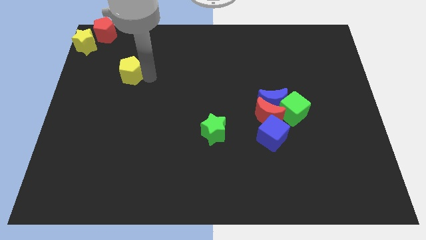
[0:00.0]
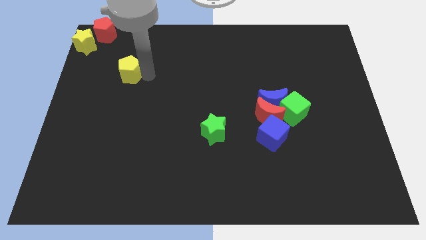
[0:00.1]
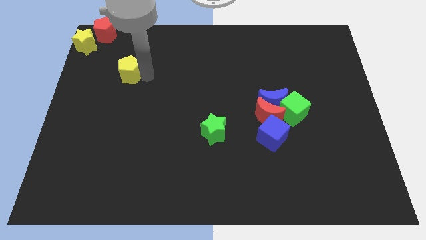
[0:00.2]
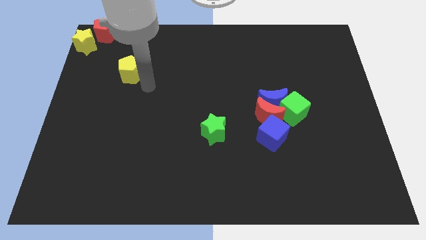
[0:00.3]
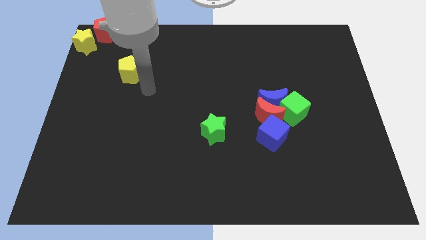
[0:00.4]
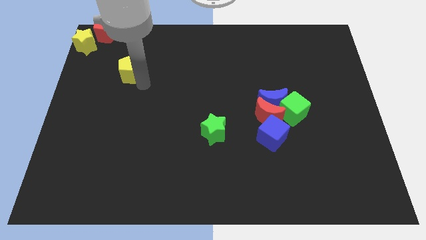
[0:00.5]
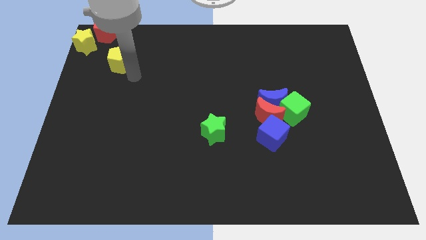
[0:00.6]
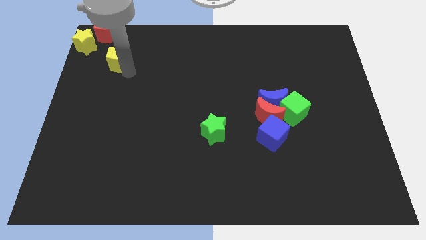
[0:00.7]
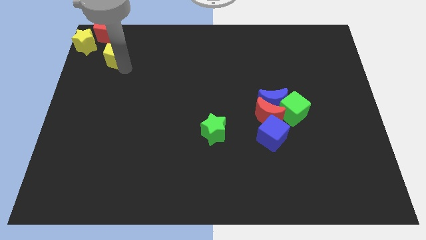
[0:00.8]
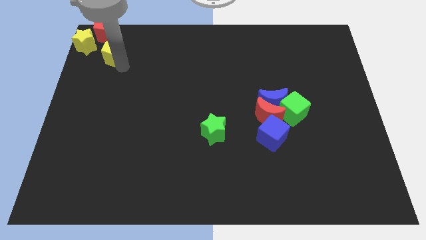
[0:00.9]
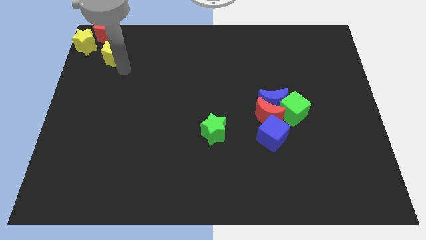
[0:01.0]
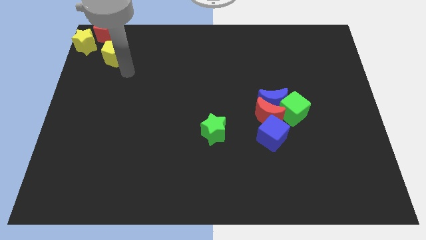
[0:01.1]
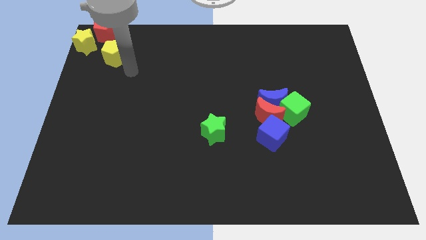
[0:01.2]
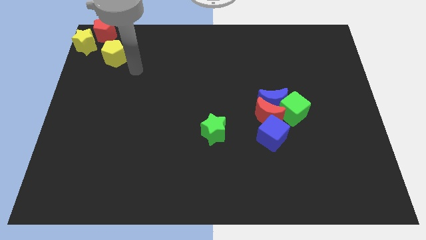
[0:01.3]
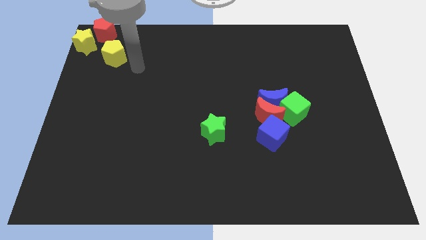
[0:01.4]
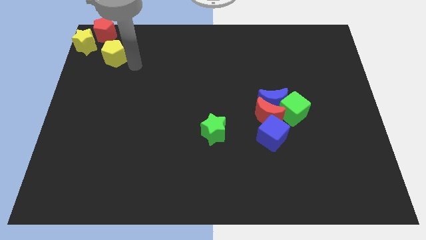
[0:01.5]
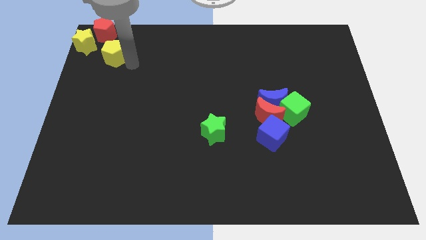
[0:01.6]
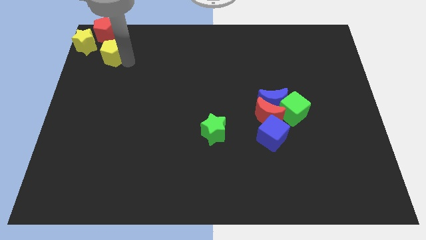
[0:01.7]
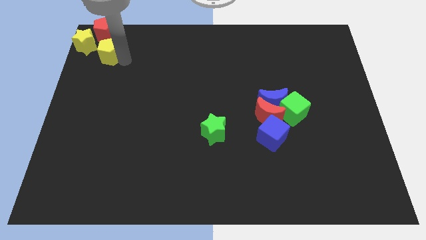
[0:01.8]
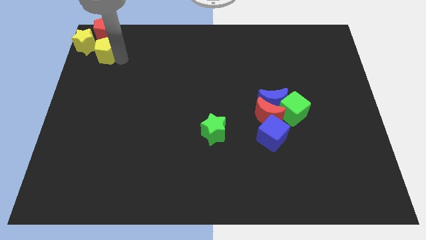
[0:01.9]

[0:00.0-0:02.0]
move the yellow pentagon below the red pentagon

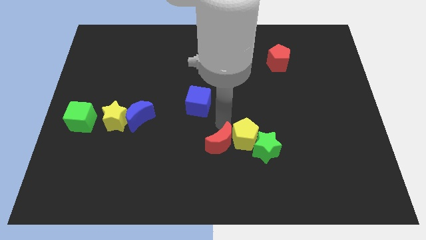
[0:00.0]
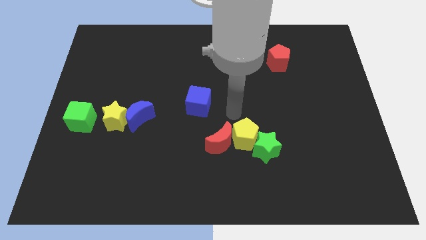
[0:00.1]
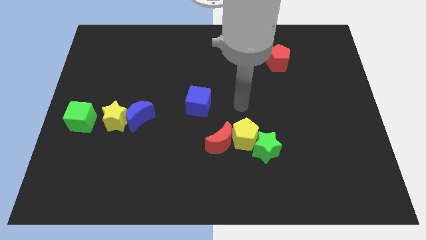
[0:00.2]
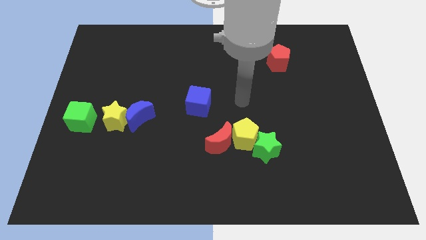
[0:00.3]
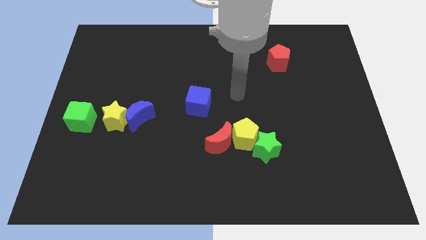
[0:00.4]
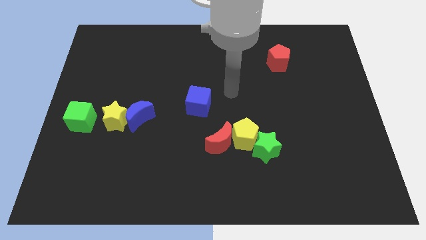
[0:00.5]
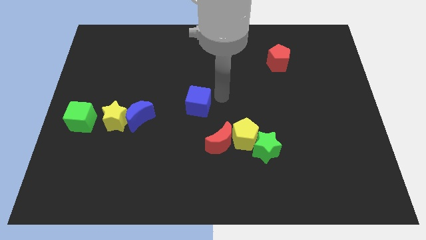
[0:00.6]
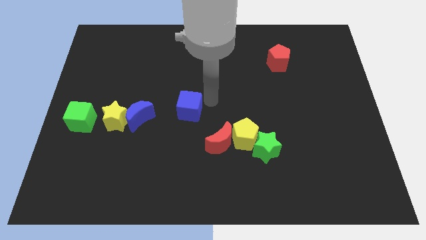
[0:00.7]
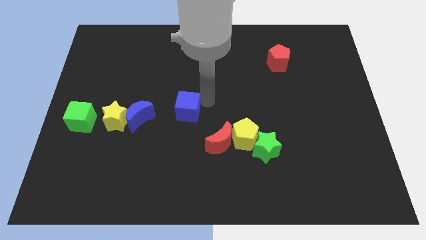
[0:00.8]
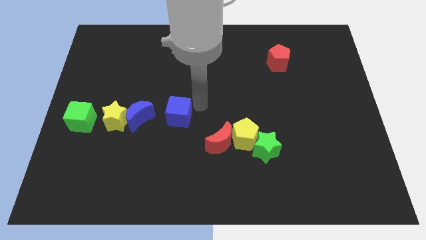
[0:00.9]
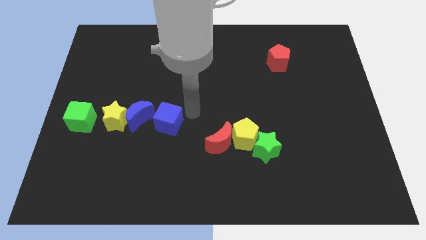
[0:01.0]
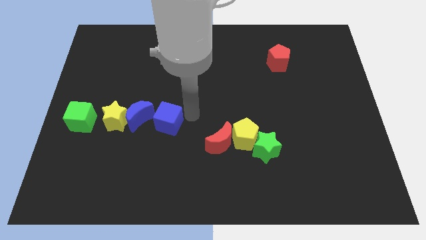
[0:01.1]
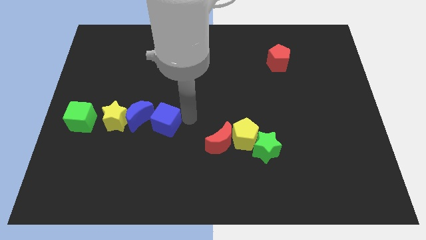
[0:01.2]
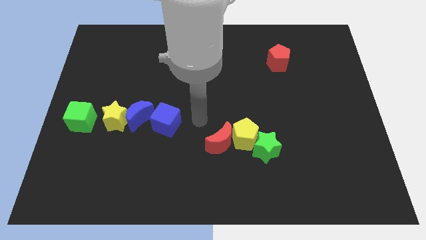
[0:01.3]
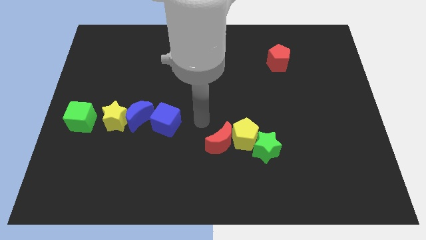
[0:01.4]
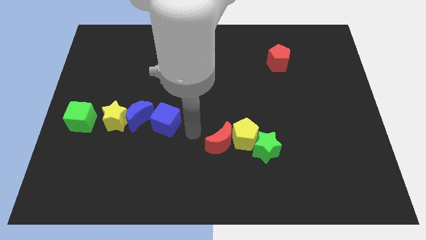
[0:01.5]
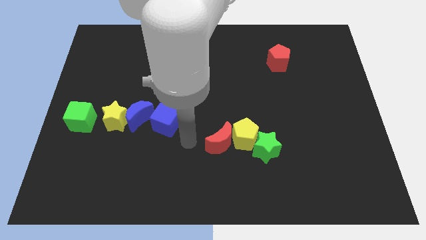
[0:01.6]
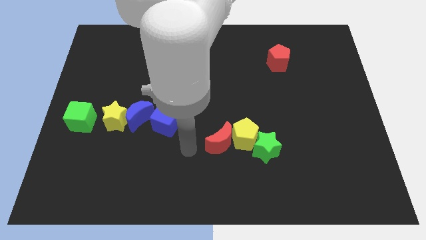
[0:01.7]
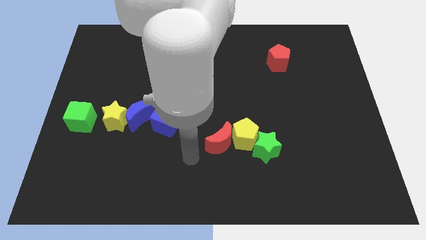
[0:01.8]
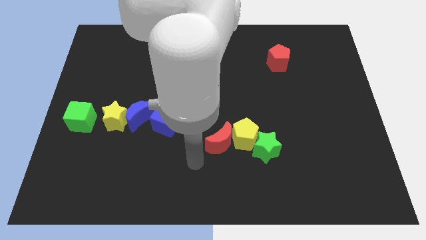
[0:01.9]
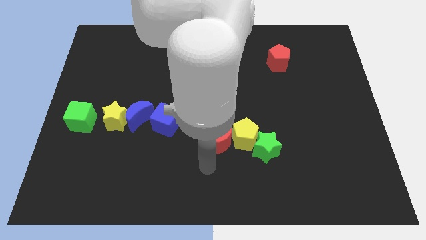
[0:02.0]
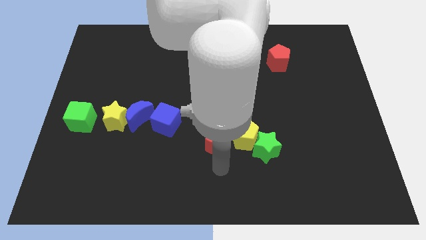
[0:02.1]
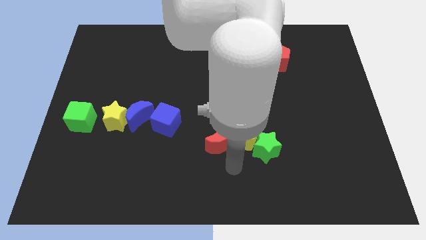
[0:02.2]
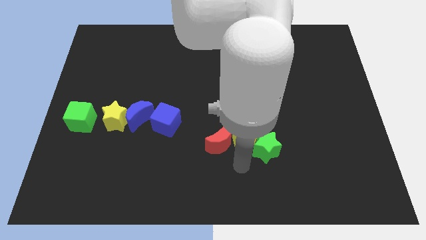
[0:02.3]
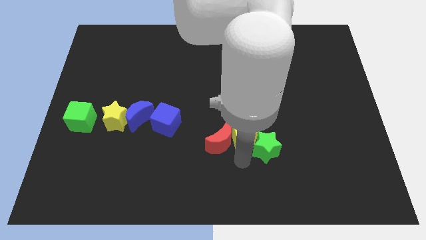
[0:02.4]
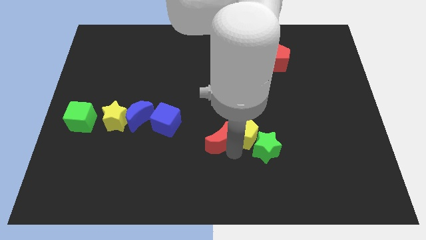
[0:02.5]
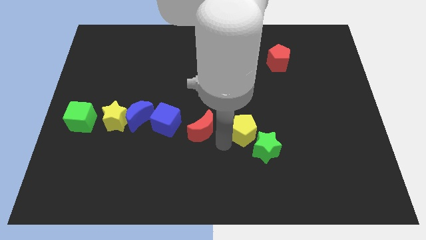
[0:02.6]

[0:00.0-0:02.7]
place the blue cube right to the blue moon

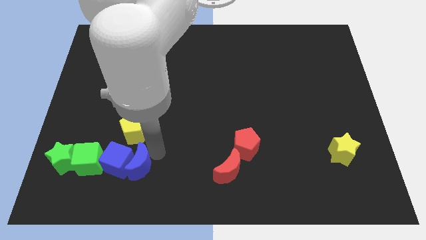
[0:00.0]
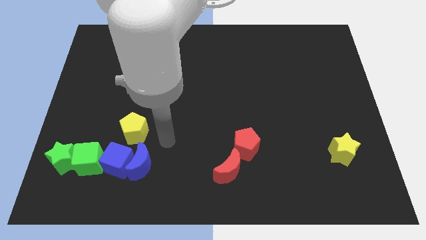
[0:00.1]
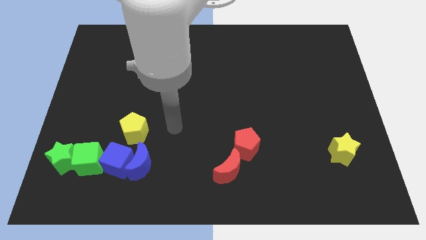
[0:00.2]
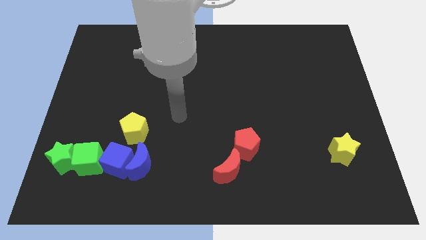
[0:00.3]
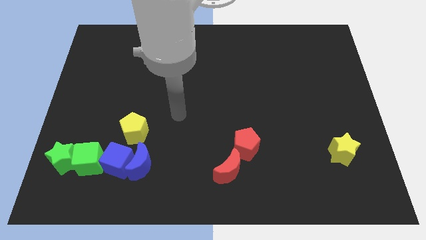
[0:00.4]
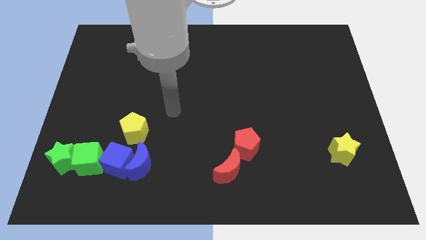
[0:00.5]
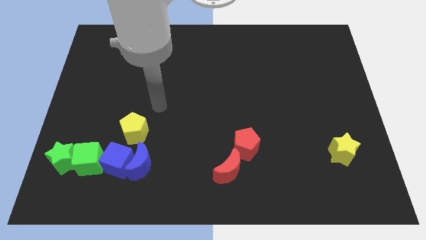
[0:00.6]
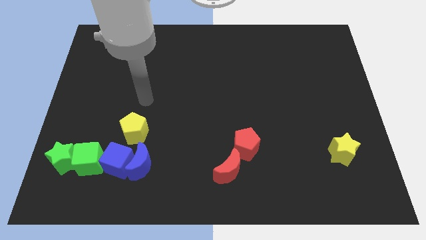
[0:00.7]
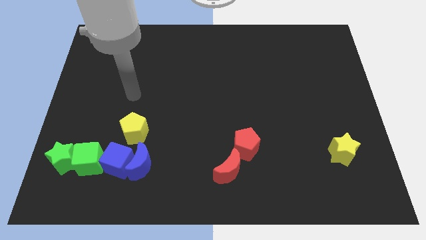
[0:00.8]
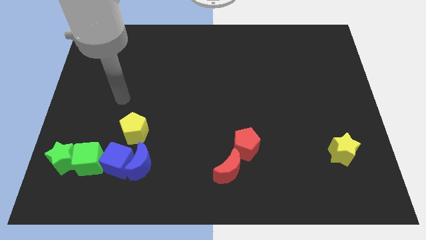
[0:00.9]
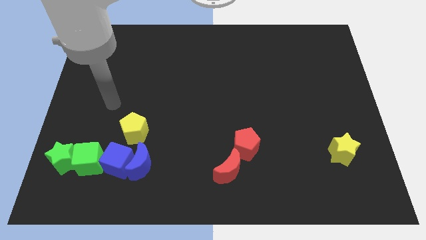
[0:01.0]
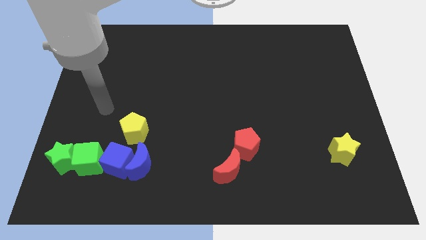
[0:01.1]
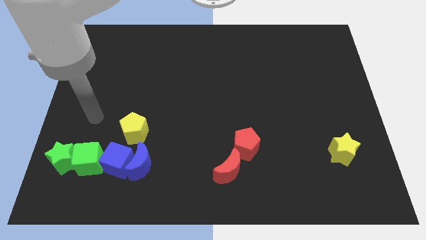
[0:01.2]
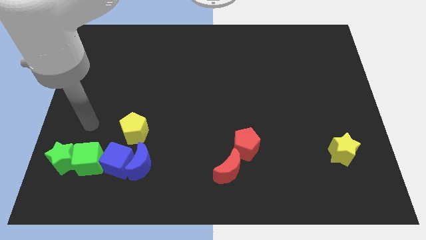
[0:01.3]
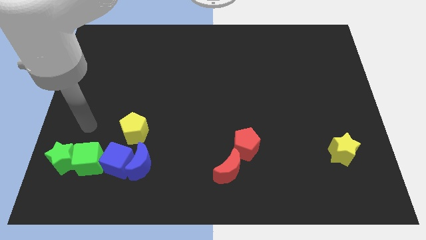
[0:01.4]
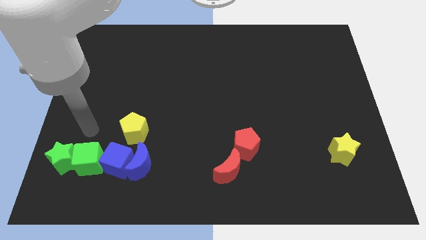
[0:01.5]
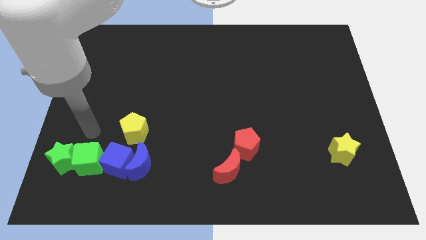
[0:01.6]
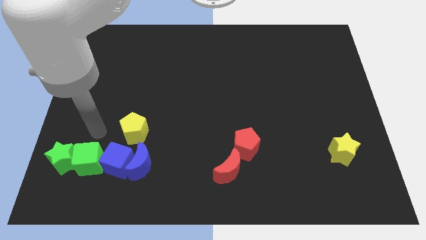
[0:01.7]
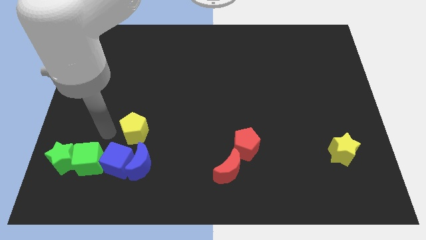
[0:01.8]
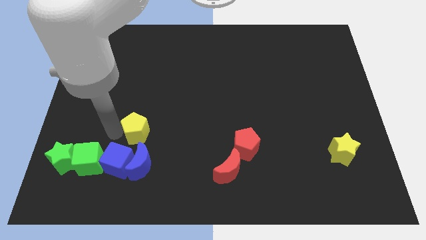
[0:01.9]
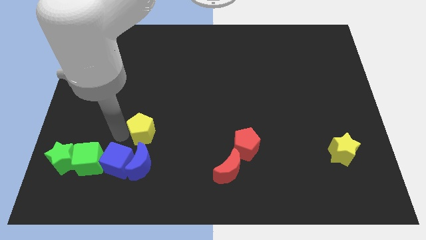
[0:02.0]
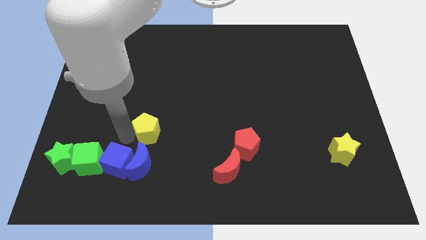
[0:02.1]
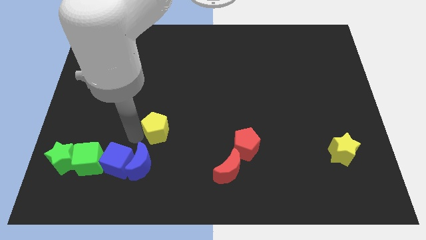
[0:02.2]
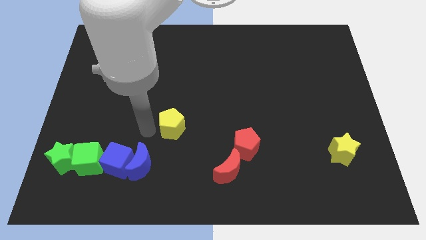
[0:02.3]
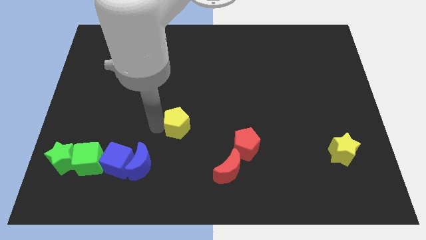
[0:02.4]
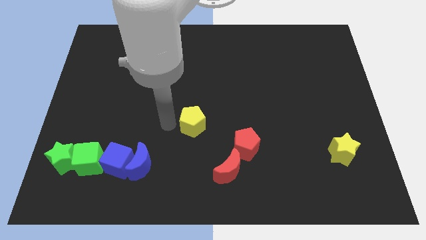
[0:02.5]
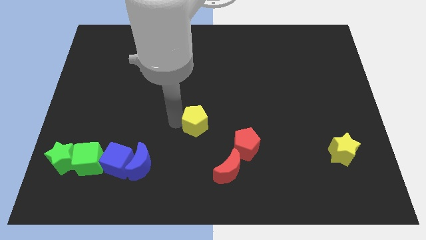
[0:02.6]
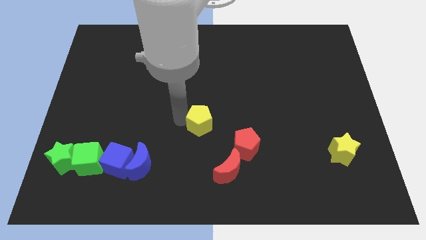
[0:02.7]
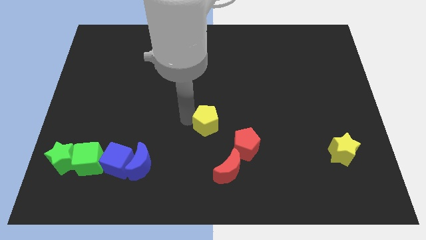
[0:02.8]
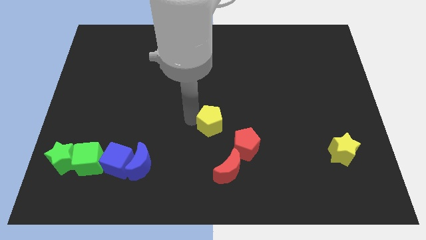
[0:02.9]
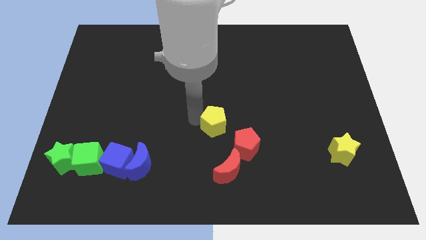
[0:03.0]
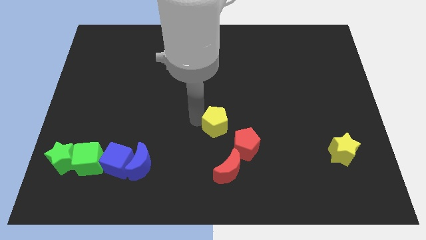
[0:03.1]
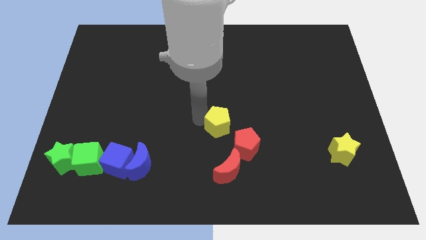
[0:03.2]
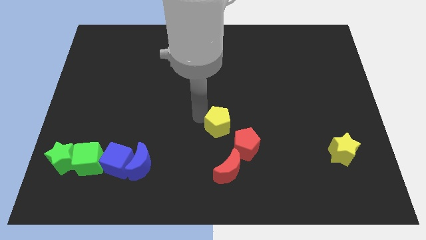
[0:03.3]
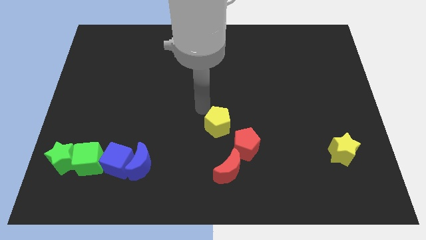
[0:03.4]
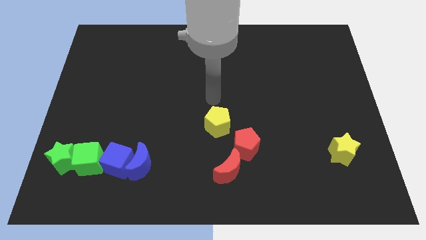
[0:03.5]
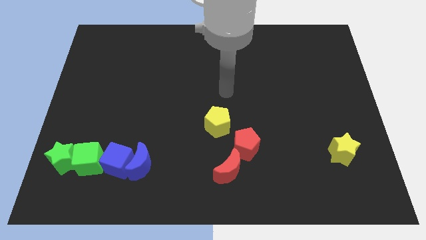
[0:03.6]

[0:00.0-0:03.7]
place the yellow pentagon diagonally on the top left side of the red pentagon

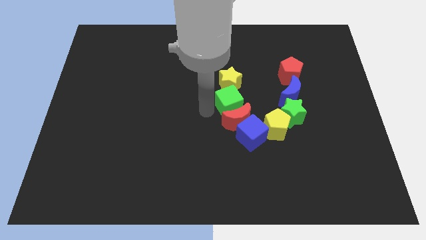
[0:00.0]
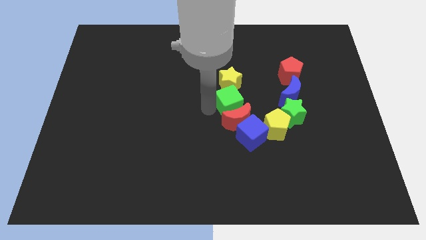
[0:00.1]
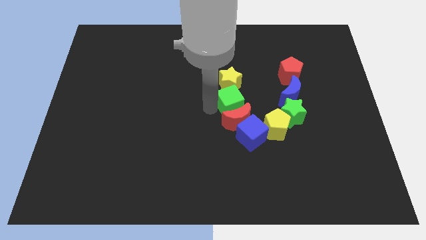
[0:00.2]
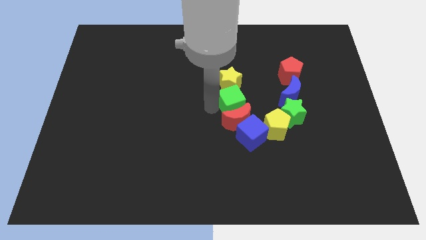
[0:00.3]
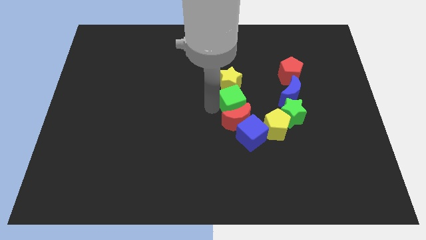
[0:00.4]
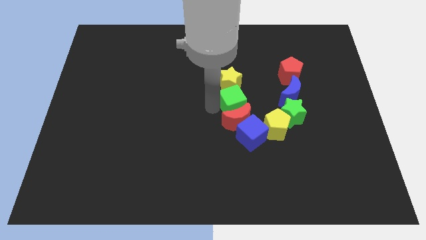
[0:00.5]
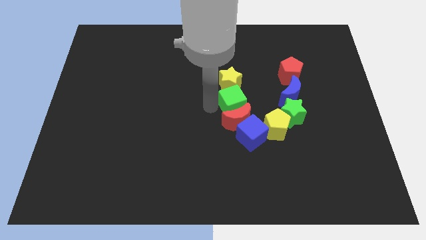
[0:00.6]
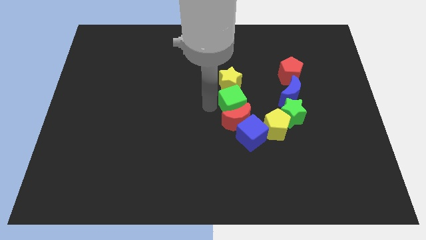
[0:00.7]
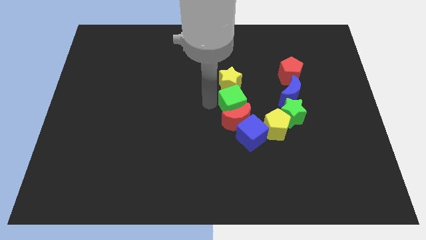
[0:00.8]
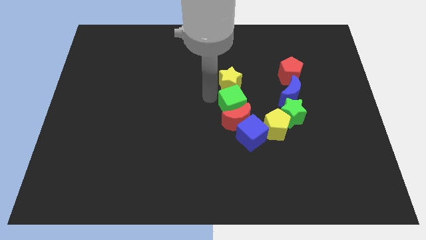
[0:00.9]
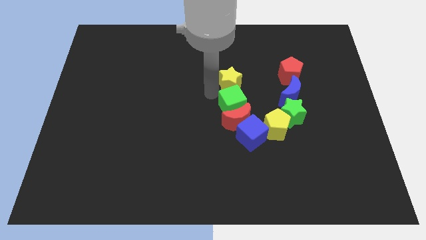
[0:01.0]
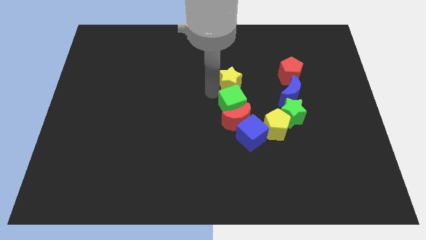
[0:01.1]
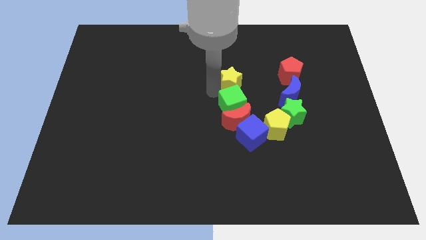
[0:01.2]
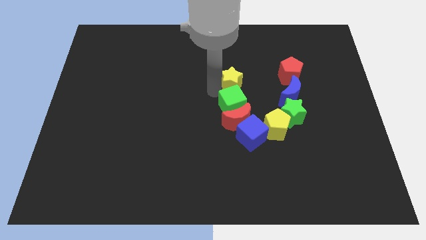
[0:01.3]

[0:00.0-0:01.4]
slightly move the green cube to the right
